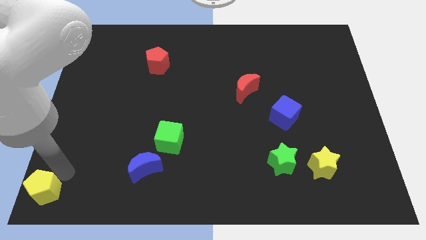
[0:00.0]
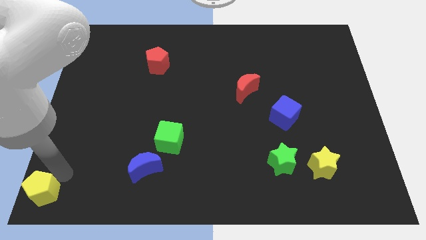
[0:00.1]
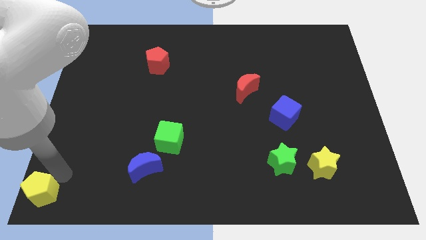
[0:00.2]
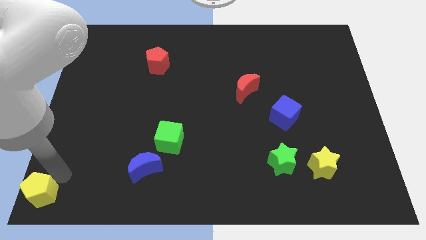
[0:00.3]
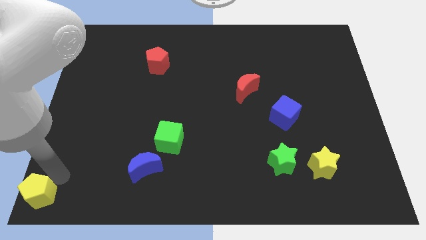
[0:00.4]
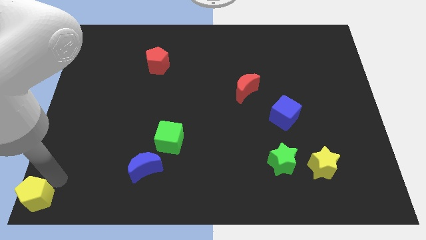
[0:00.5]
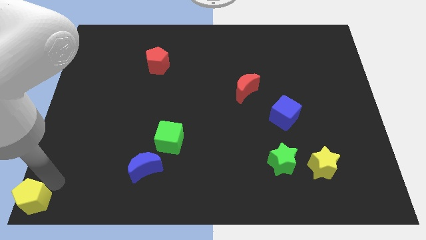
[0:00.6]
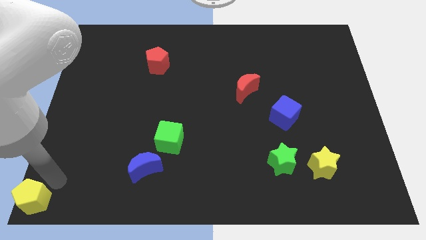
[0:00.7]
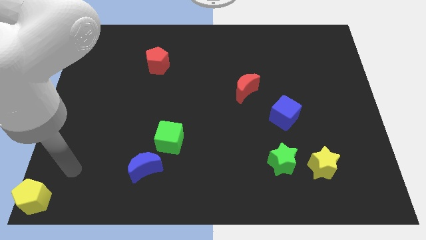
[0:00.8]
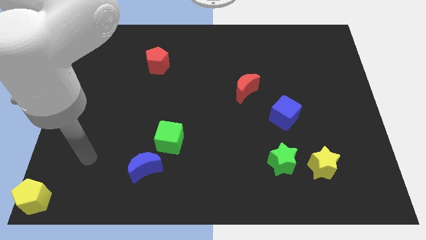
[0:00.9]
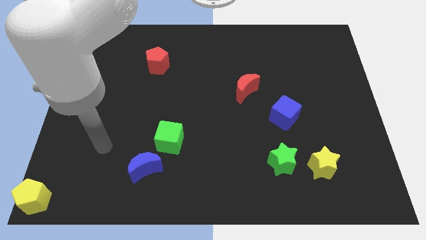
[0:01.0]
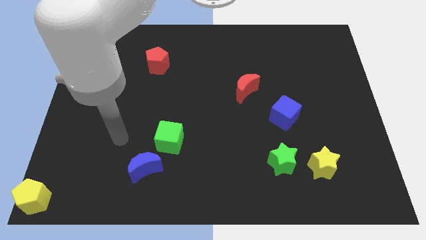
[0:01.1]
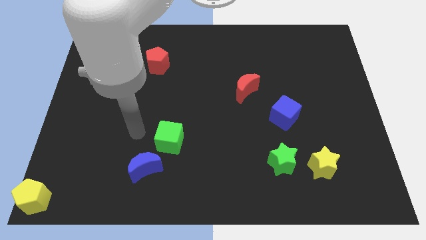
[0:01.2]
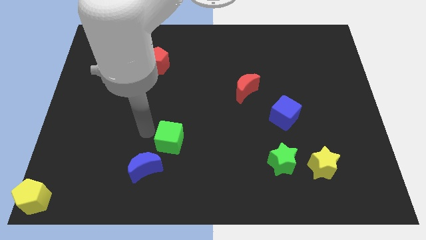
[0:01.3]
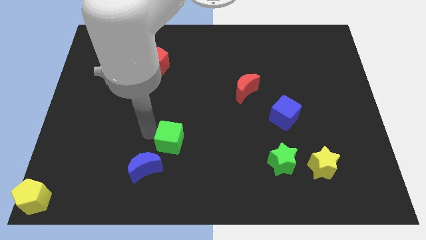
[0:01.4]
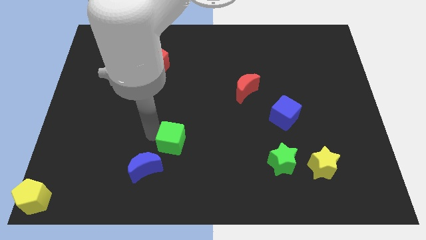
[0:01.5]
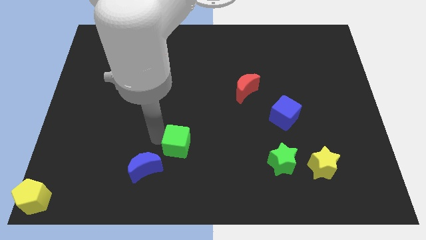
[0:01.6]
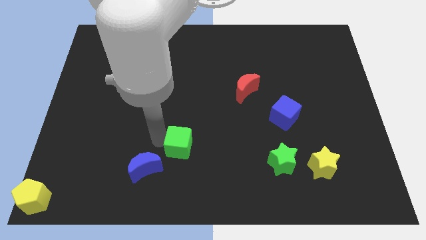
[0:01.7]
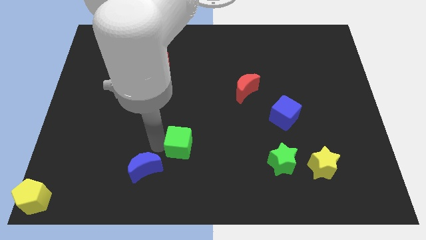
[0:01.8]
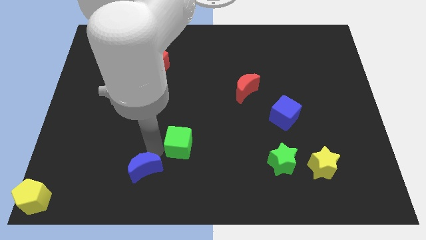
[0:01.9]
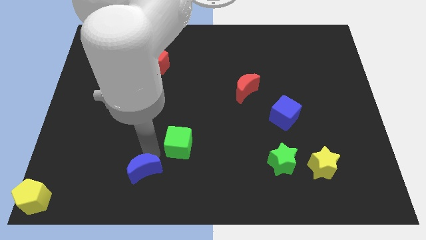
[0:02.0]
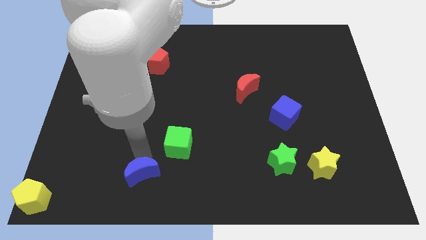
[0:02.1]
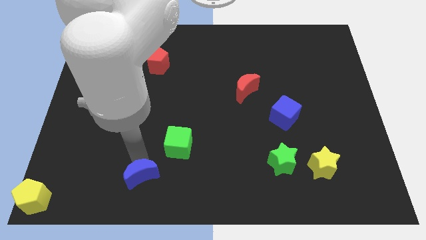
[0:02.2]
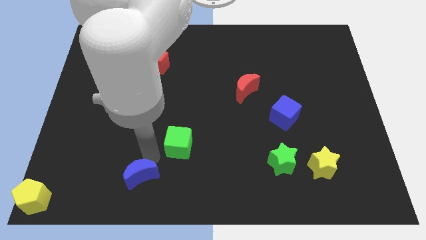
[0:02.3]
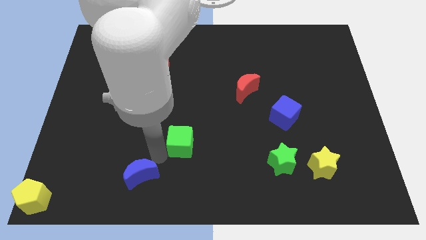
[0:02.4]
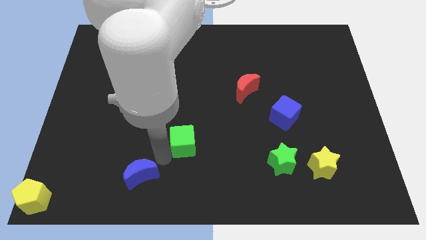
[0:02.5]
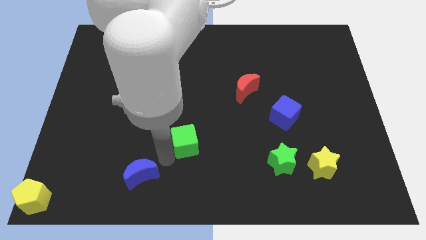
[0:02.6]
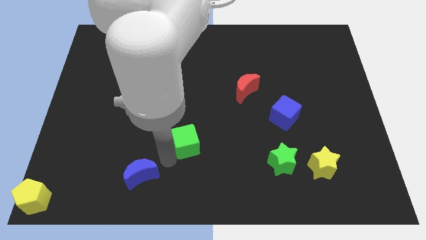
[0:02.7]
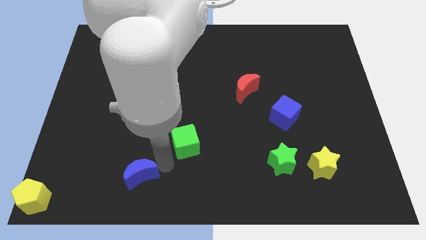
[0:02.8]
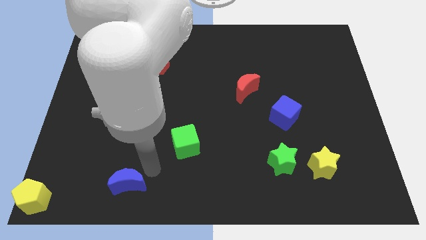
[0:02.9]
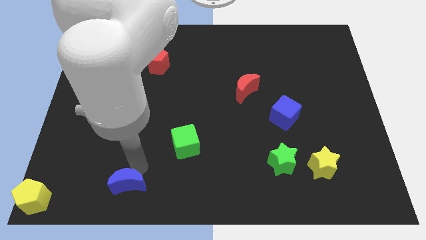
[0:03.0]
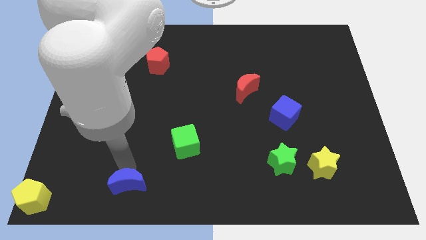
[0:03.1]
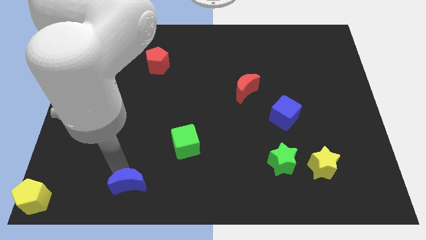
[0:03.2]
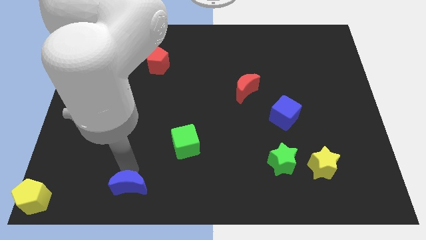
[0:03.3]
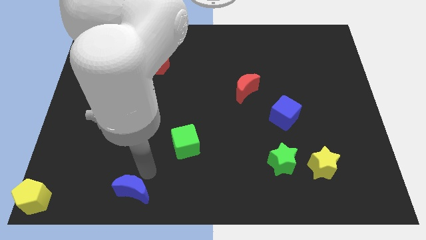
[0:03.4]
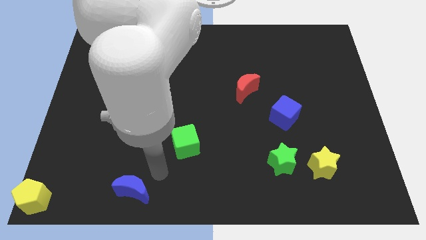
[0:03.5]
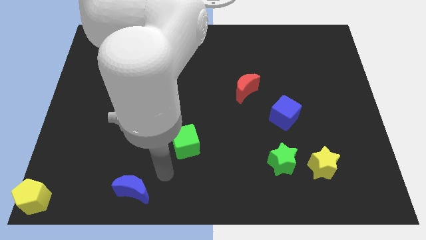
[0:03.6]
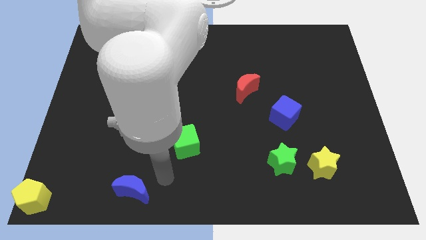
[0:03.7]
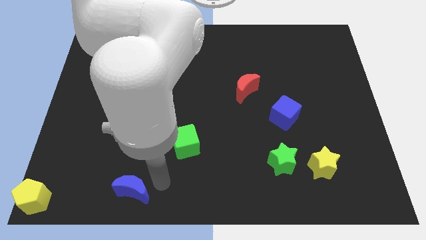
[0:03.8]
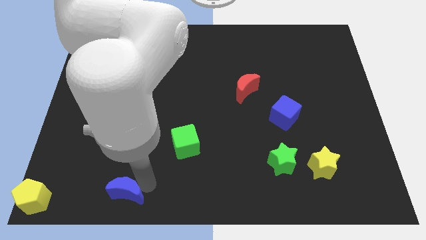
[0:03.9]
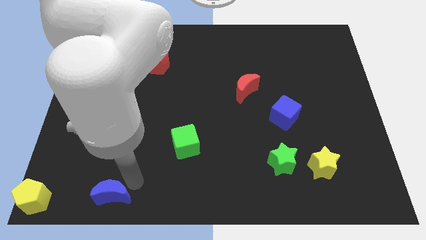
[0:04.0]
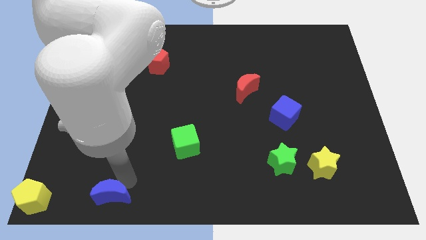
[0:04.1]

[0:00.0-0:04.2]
push blue moon towards bottom

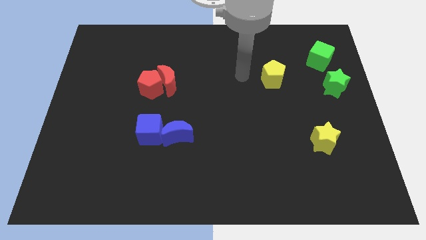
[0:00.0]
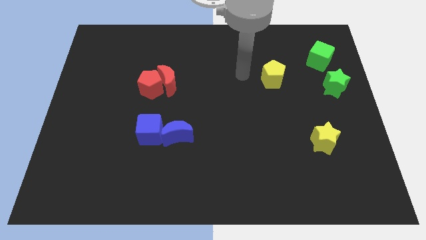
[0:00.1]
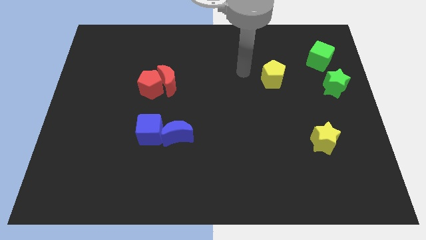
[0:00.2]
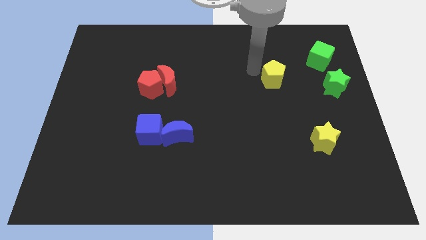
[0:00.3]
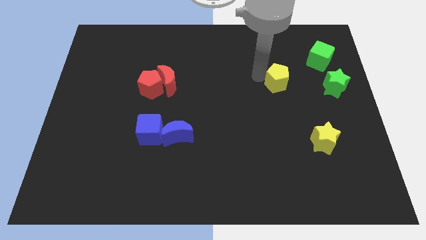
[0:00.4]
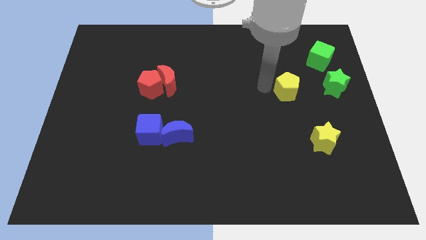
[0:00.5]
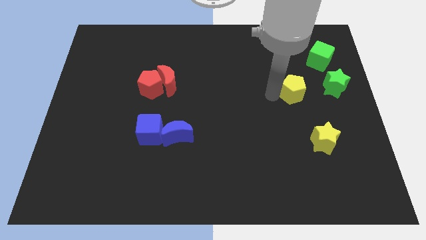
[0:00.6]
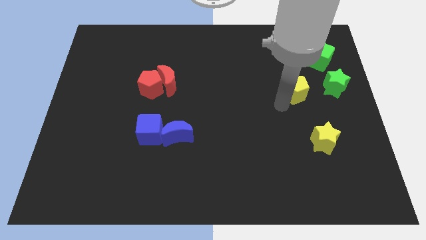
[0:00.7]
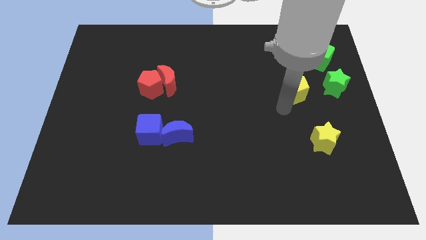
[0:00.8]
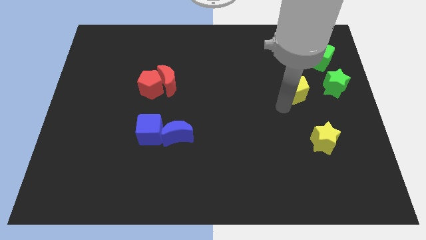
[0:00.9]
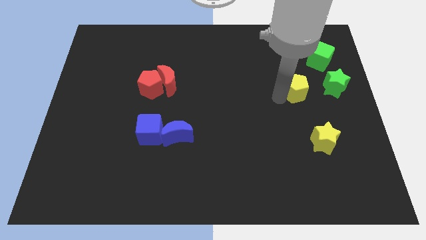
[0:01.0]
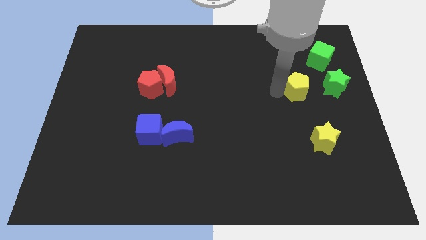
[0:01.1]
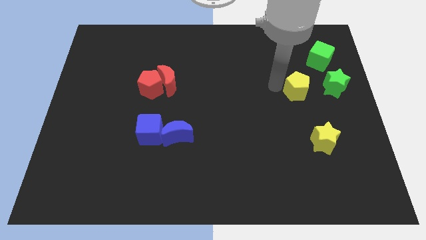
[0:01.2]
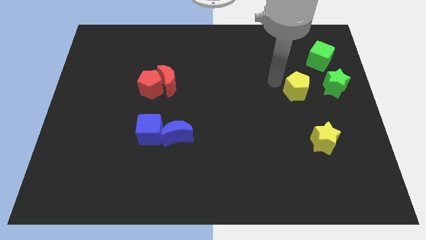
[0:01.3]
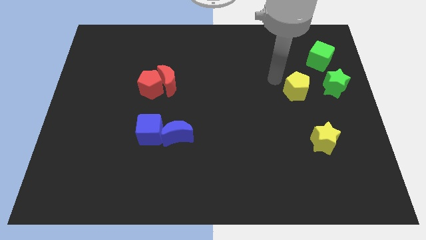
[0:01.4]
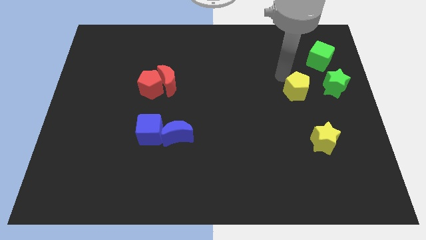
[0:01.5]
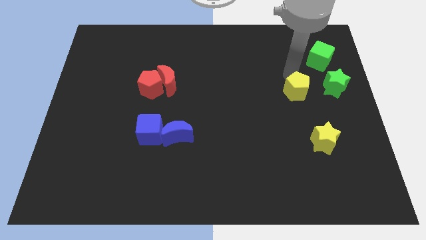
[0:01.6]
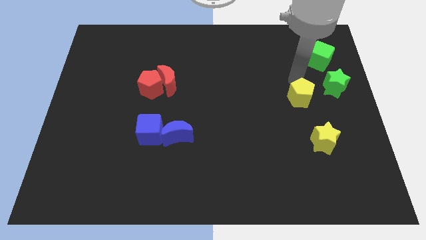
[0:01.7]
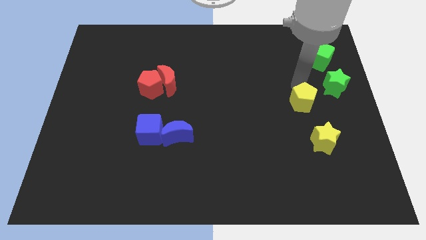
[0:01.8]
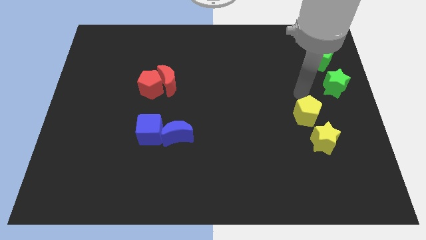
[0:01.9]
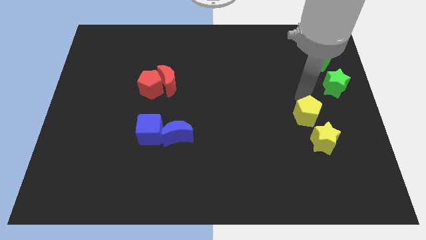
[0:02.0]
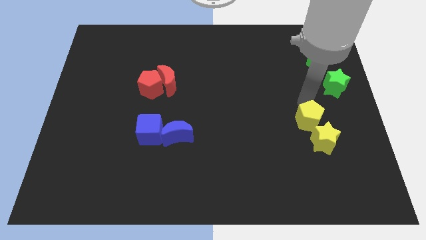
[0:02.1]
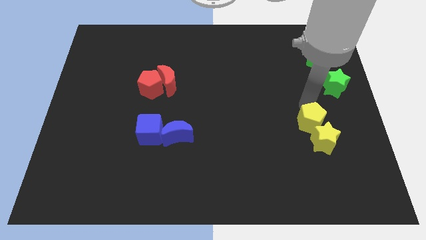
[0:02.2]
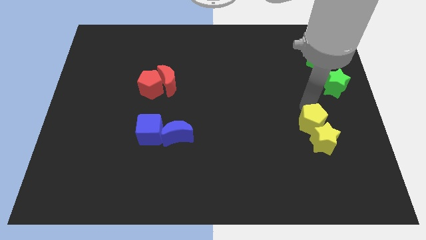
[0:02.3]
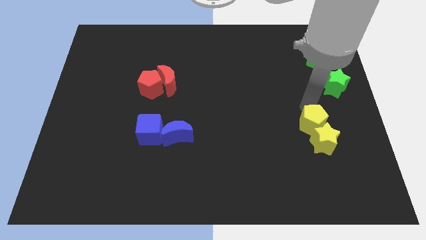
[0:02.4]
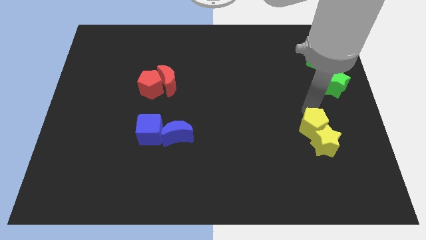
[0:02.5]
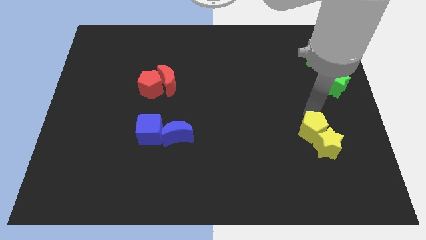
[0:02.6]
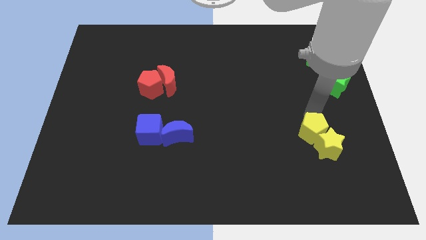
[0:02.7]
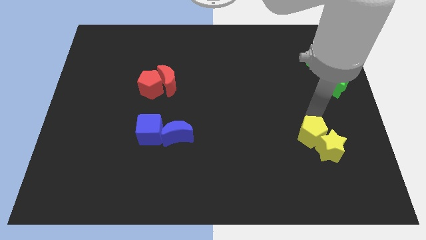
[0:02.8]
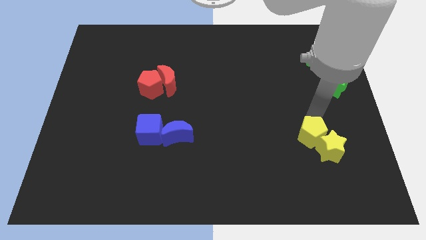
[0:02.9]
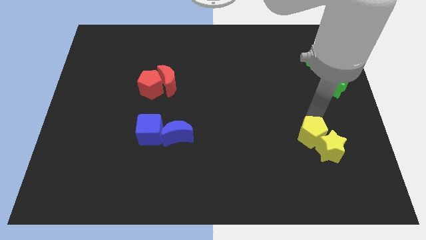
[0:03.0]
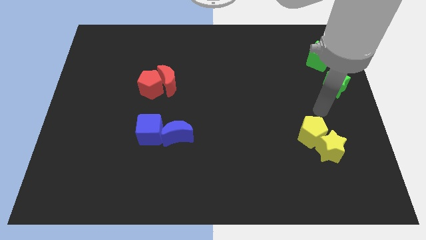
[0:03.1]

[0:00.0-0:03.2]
push the yellow pentagon into the yellow star

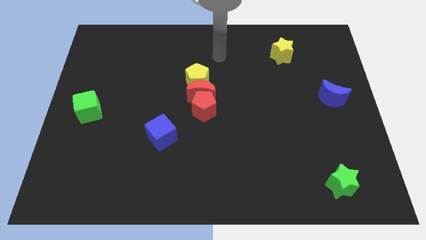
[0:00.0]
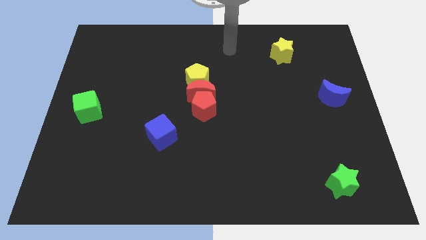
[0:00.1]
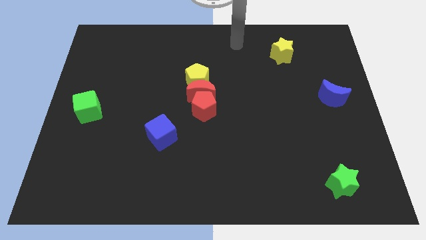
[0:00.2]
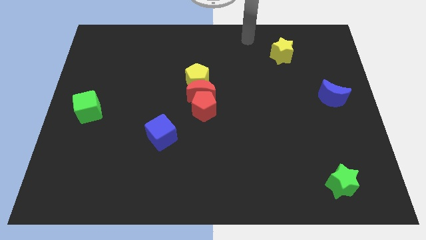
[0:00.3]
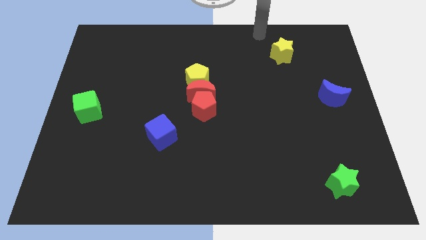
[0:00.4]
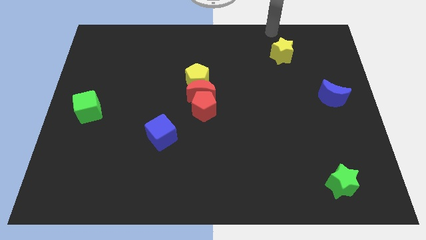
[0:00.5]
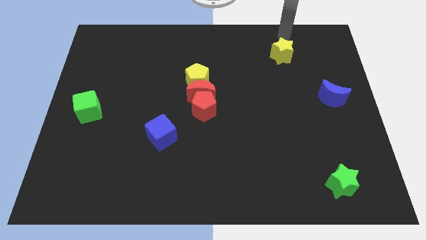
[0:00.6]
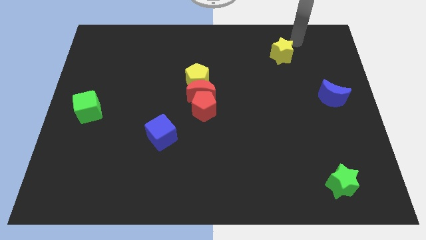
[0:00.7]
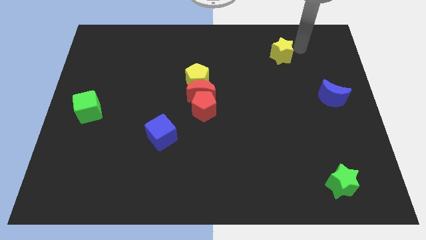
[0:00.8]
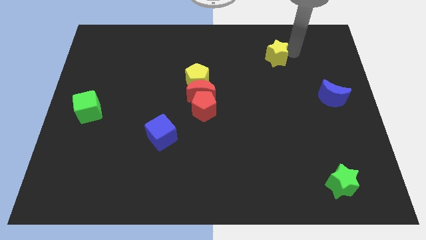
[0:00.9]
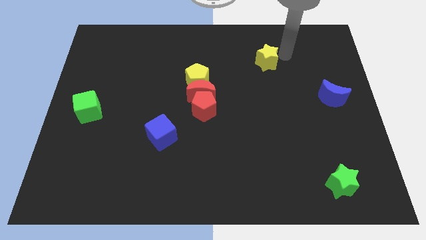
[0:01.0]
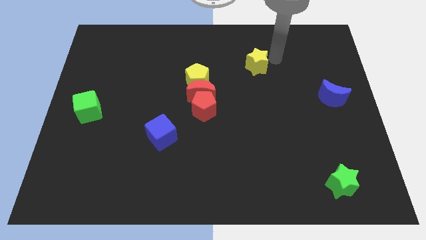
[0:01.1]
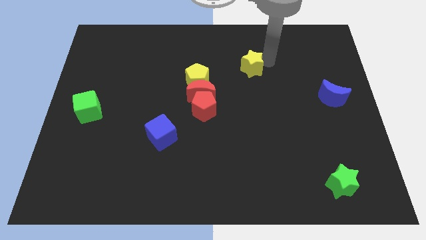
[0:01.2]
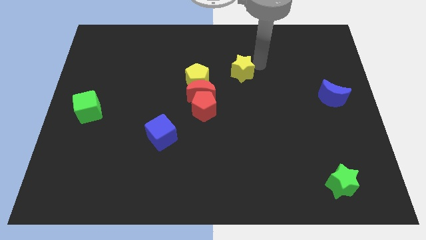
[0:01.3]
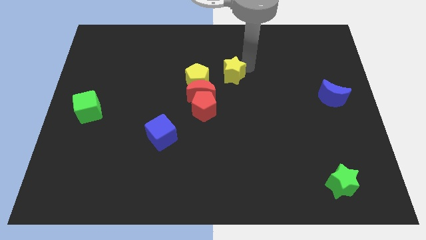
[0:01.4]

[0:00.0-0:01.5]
push the yellow star towards the yellow pentagon
